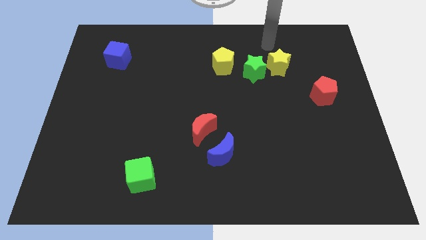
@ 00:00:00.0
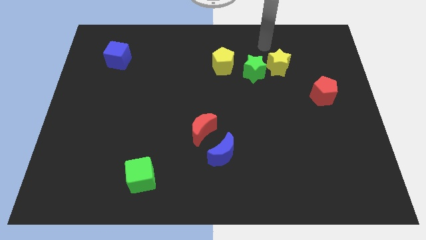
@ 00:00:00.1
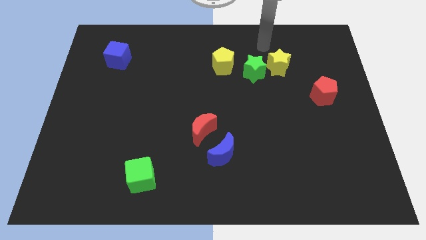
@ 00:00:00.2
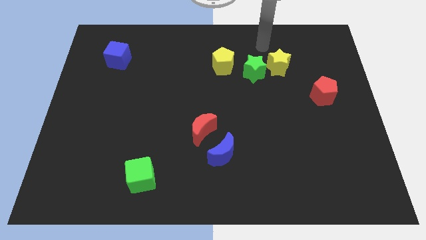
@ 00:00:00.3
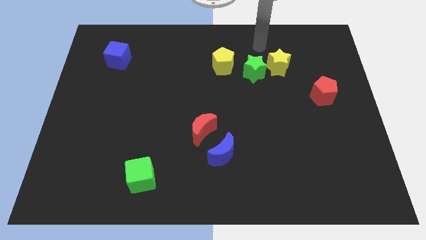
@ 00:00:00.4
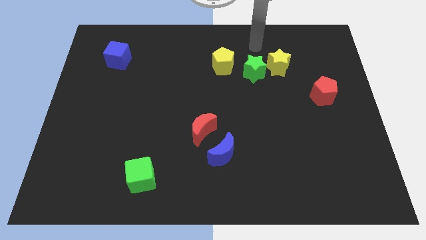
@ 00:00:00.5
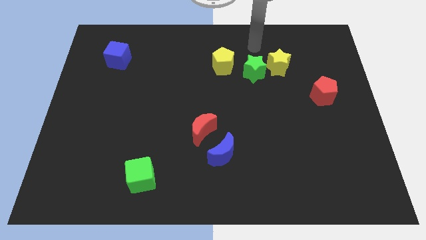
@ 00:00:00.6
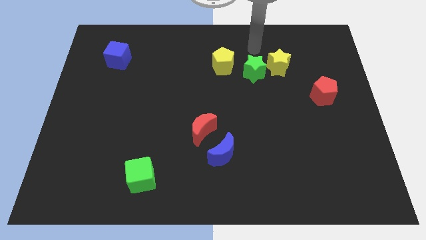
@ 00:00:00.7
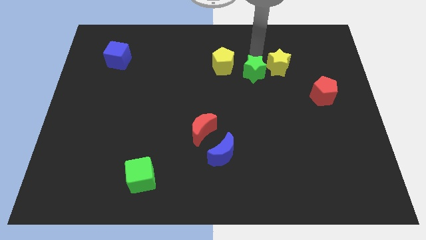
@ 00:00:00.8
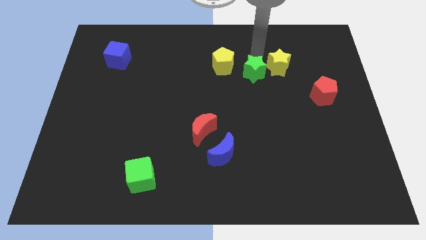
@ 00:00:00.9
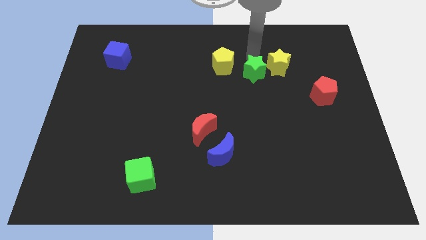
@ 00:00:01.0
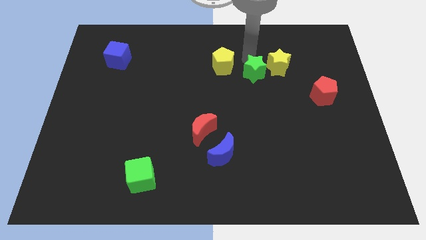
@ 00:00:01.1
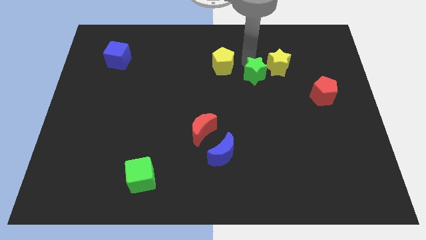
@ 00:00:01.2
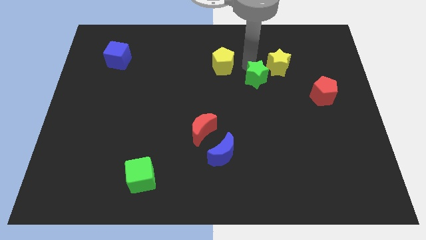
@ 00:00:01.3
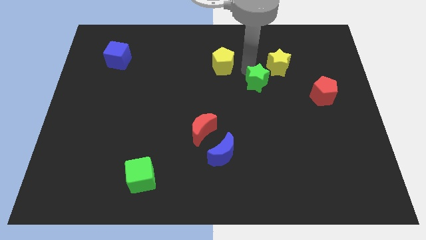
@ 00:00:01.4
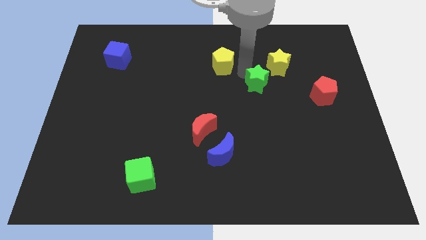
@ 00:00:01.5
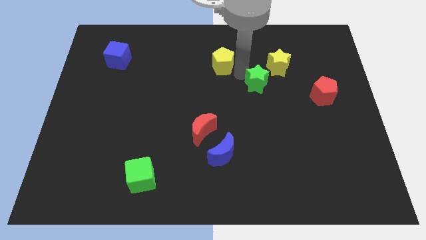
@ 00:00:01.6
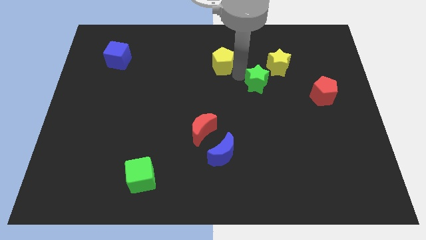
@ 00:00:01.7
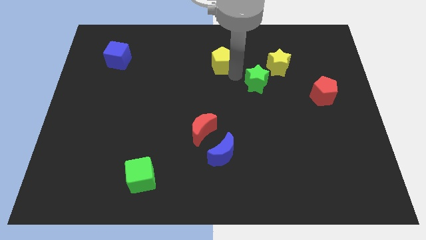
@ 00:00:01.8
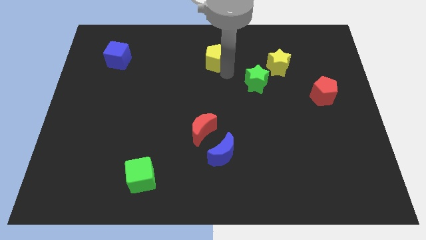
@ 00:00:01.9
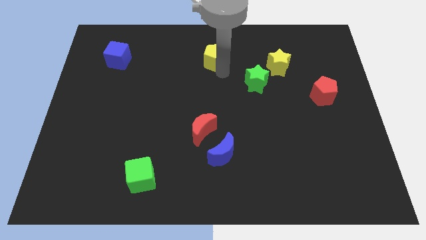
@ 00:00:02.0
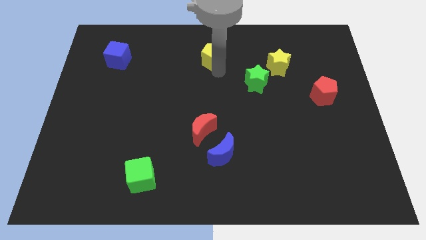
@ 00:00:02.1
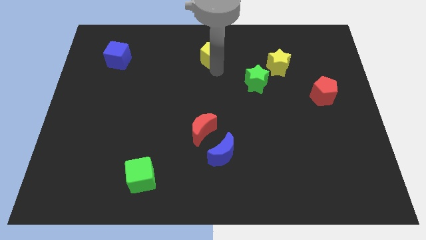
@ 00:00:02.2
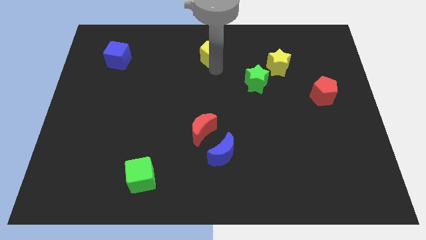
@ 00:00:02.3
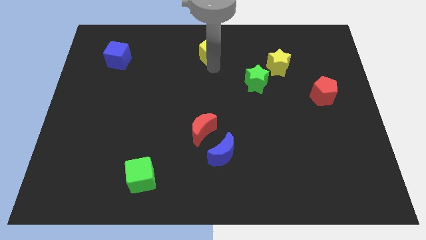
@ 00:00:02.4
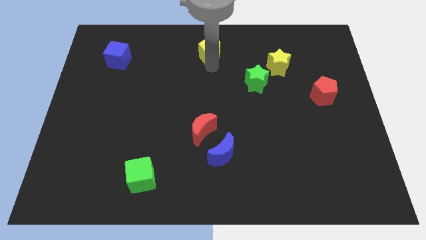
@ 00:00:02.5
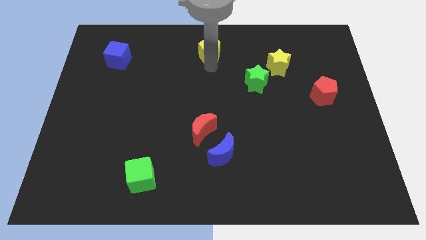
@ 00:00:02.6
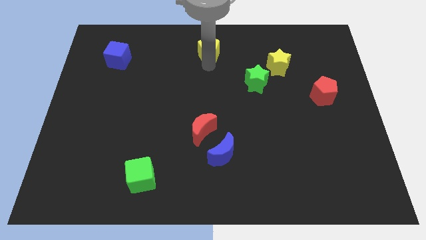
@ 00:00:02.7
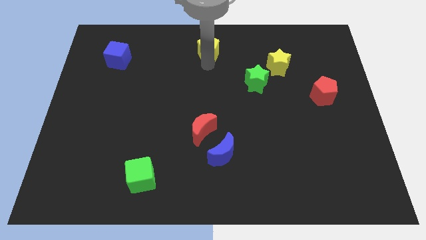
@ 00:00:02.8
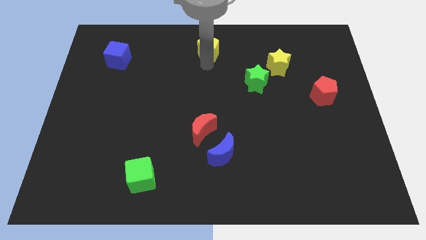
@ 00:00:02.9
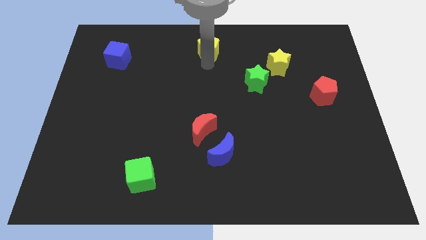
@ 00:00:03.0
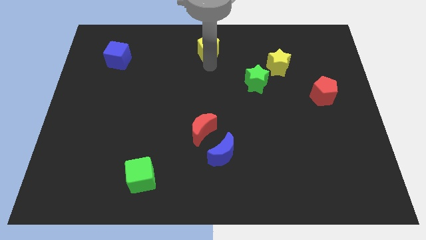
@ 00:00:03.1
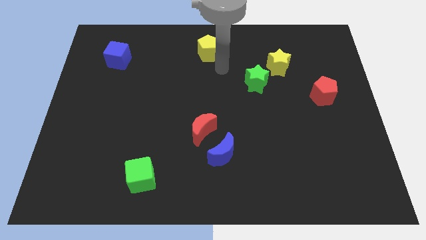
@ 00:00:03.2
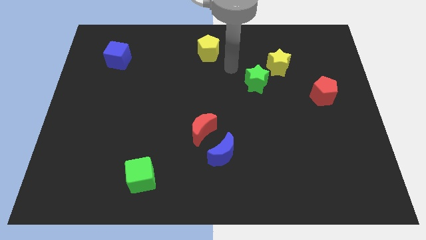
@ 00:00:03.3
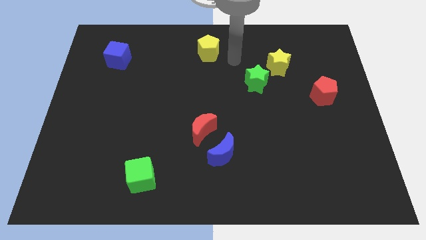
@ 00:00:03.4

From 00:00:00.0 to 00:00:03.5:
separate the green star and yellow pentagon

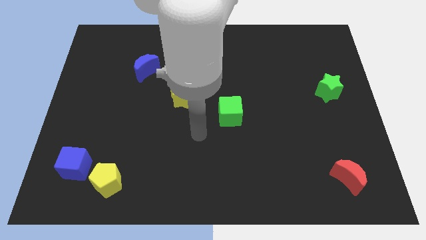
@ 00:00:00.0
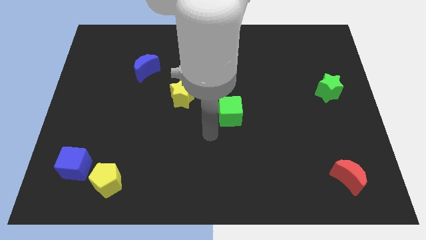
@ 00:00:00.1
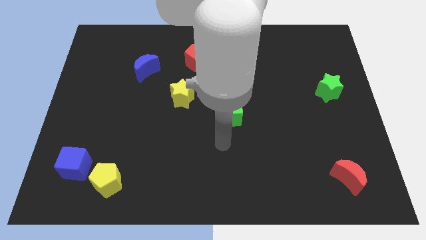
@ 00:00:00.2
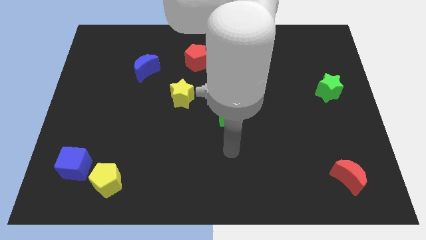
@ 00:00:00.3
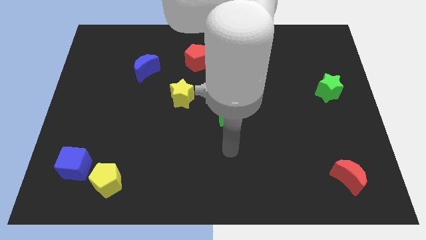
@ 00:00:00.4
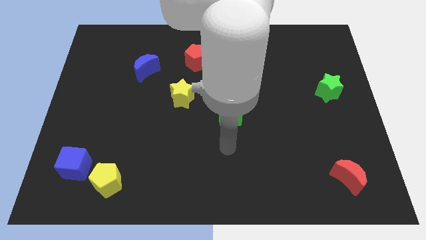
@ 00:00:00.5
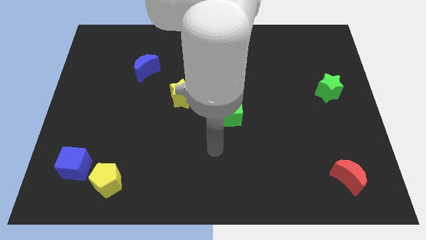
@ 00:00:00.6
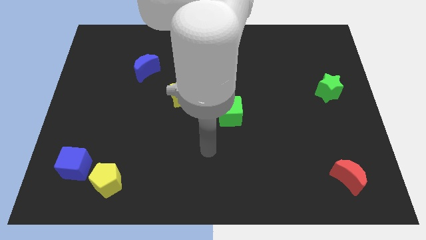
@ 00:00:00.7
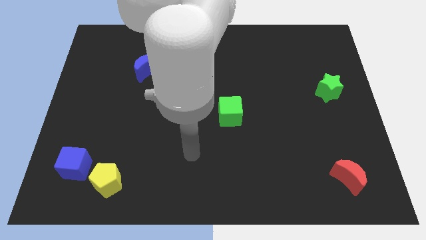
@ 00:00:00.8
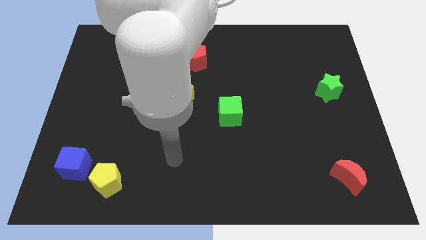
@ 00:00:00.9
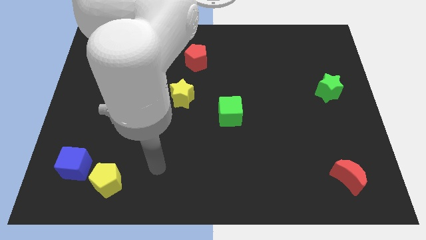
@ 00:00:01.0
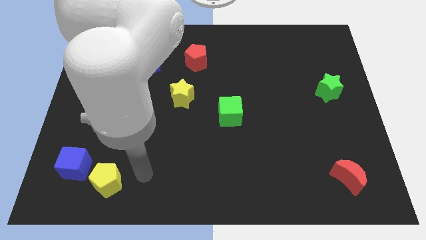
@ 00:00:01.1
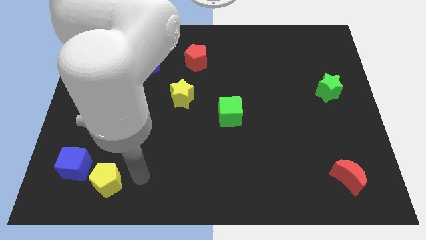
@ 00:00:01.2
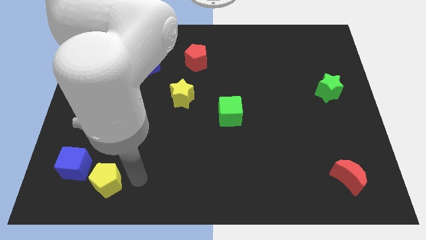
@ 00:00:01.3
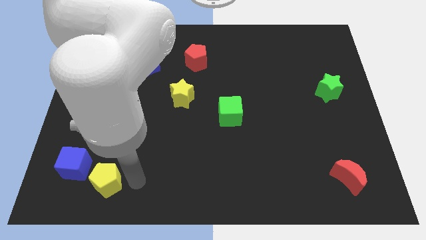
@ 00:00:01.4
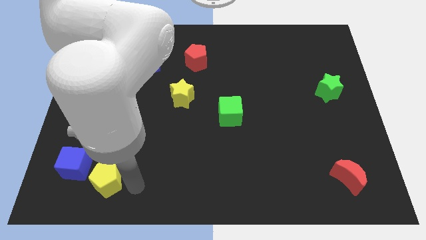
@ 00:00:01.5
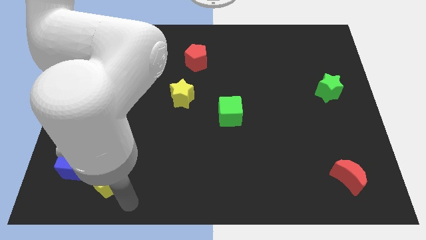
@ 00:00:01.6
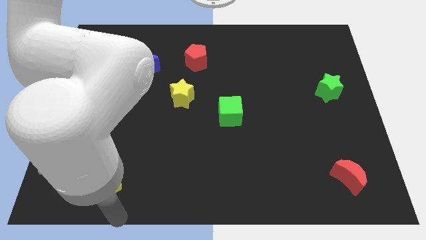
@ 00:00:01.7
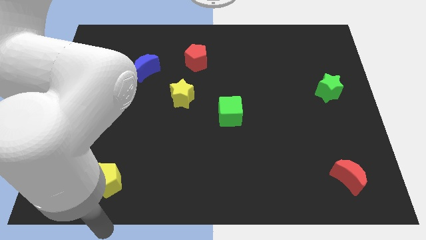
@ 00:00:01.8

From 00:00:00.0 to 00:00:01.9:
point your arm below yellow pentagon

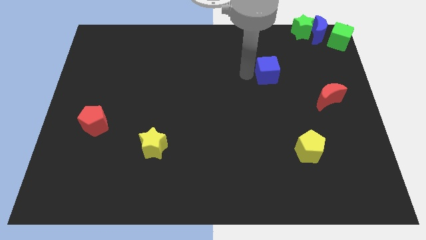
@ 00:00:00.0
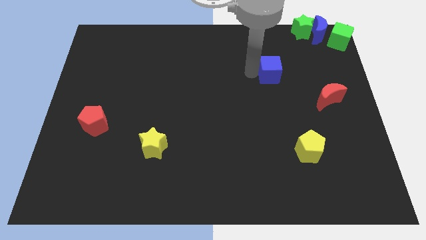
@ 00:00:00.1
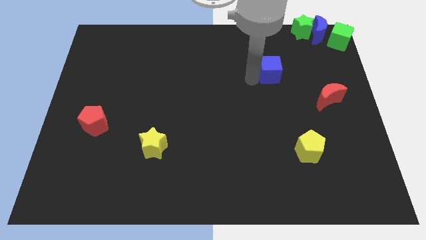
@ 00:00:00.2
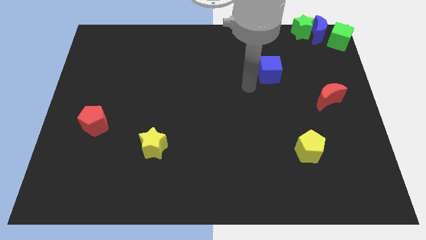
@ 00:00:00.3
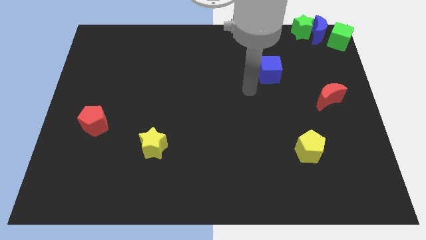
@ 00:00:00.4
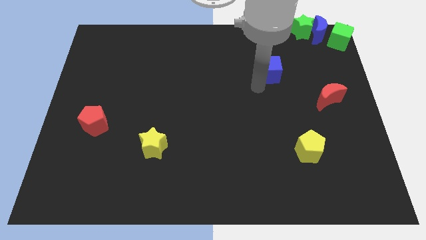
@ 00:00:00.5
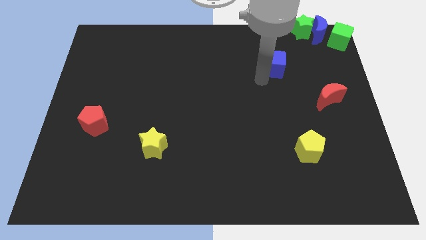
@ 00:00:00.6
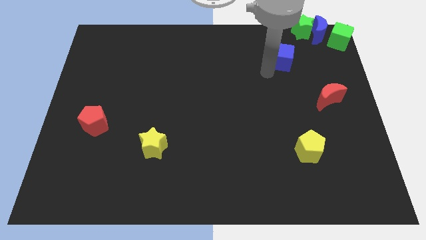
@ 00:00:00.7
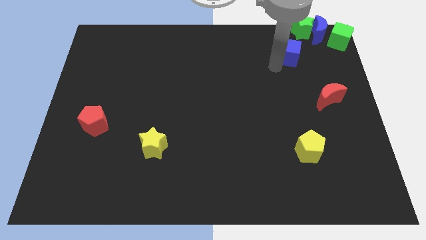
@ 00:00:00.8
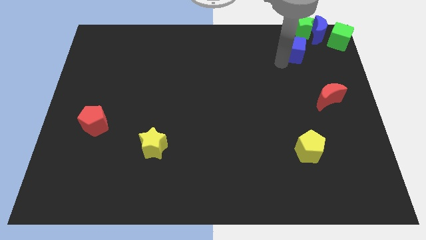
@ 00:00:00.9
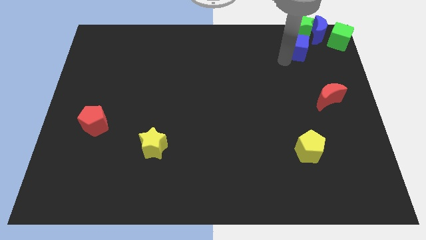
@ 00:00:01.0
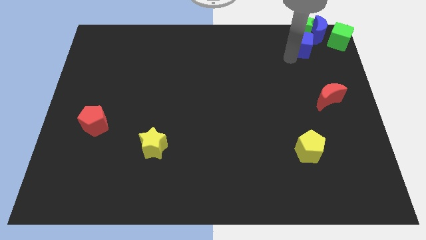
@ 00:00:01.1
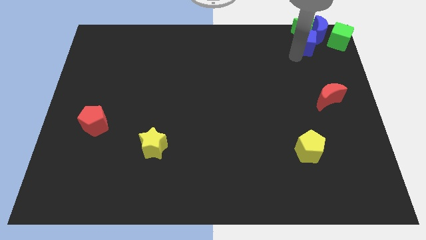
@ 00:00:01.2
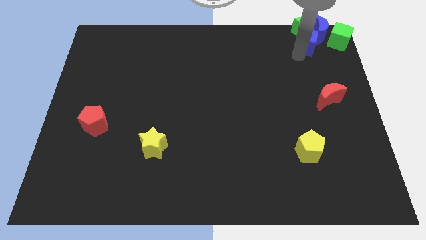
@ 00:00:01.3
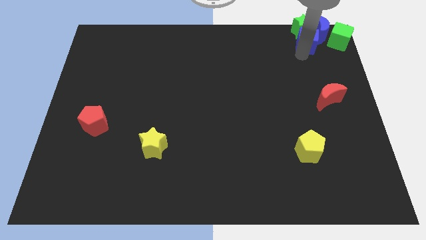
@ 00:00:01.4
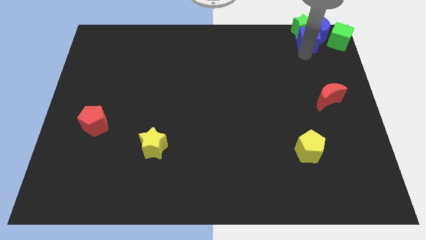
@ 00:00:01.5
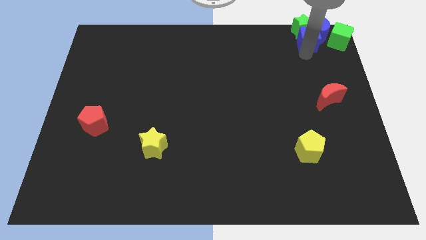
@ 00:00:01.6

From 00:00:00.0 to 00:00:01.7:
push the blue cube to the top right

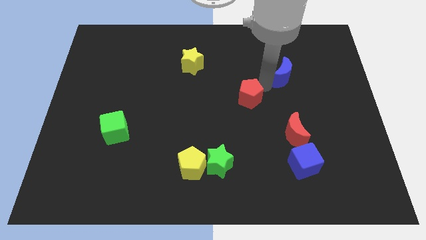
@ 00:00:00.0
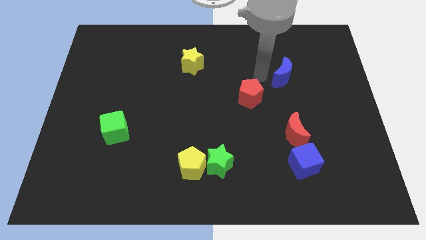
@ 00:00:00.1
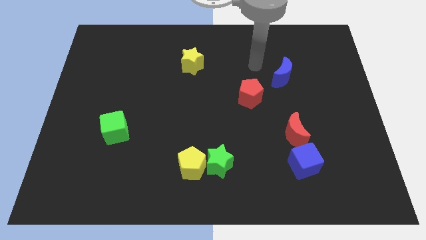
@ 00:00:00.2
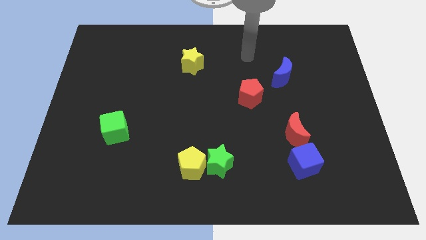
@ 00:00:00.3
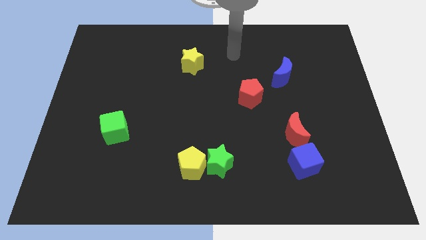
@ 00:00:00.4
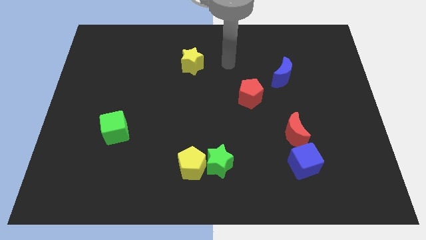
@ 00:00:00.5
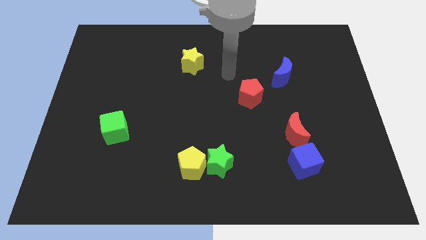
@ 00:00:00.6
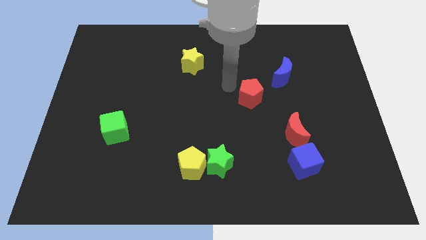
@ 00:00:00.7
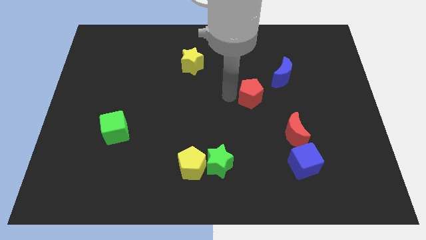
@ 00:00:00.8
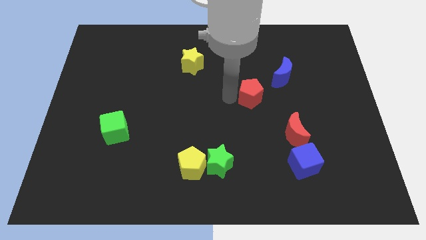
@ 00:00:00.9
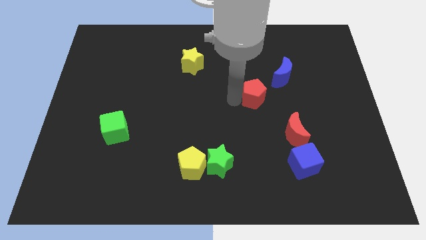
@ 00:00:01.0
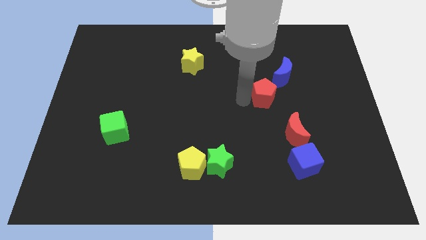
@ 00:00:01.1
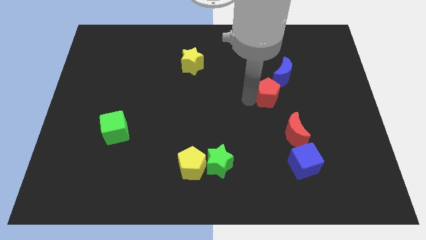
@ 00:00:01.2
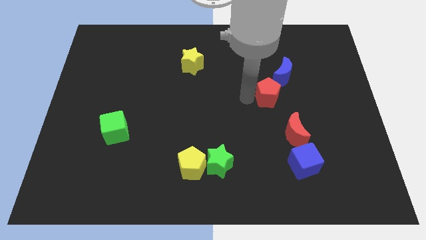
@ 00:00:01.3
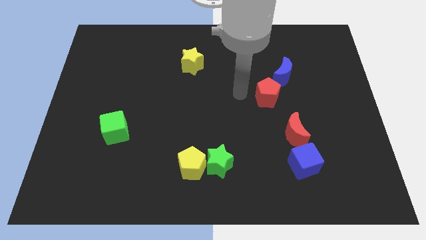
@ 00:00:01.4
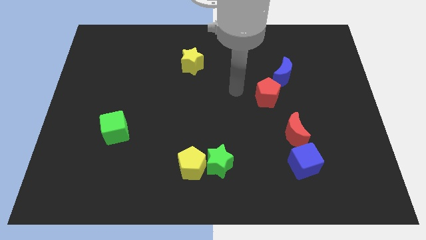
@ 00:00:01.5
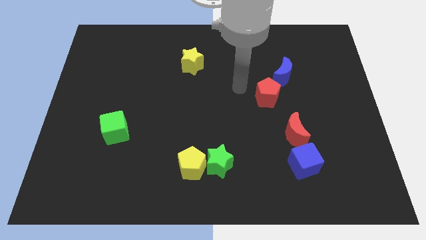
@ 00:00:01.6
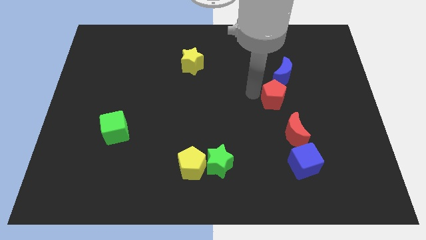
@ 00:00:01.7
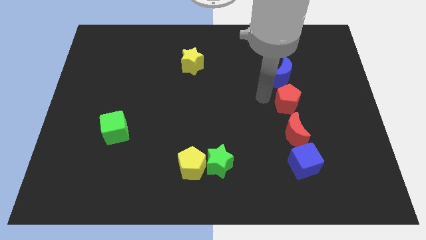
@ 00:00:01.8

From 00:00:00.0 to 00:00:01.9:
slide the red pentagon to the bottom side of the blue crescent
